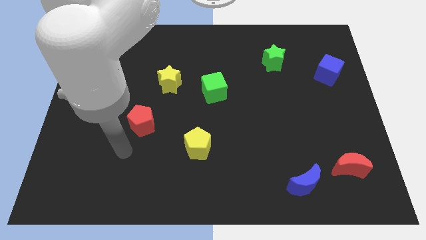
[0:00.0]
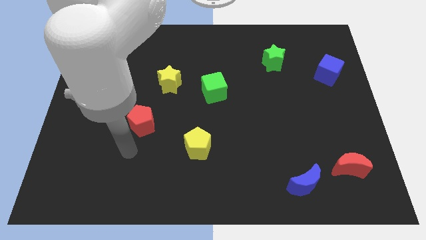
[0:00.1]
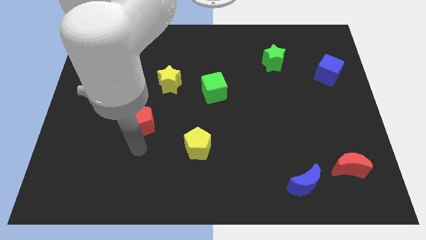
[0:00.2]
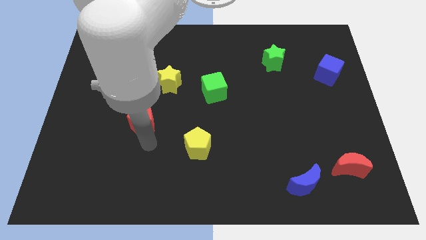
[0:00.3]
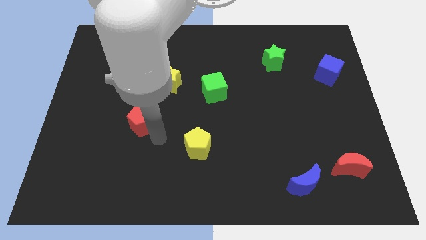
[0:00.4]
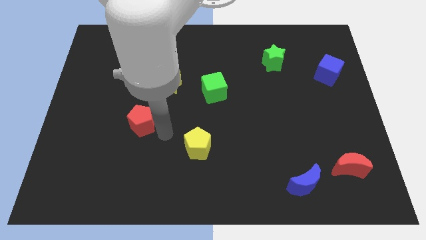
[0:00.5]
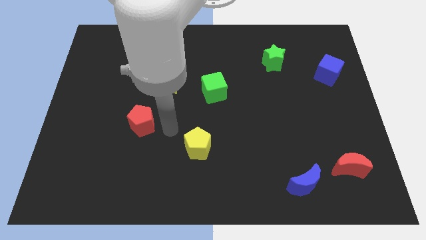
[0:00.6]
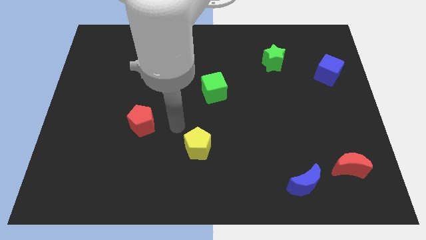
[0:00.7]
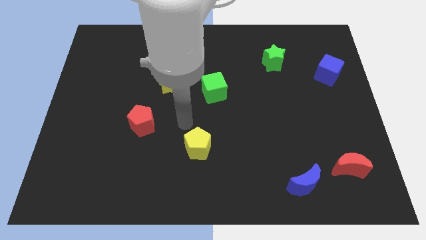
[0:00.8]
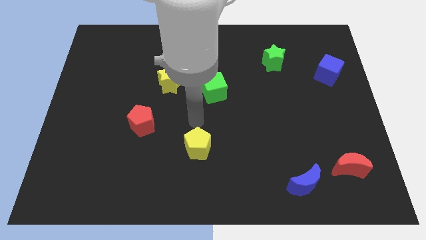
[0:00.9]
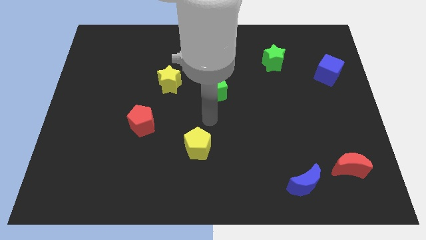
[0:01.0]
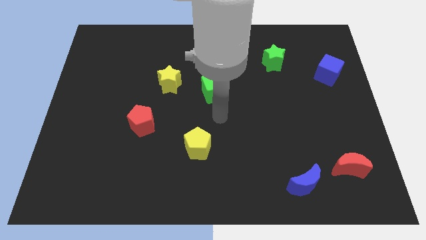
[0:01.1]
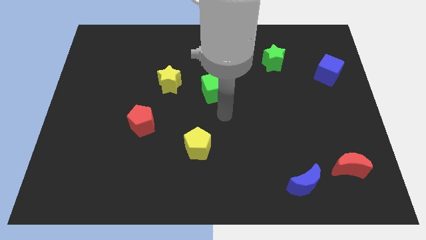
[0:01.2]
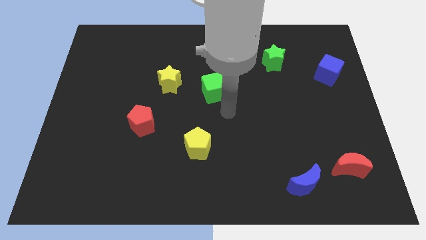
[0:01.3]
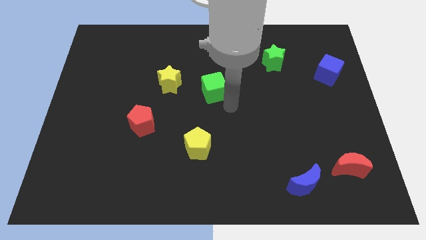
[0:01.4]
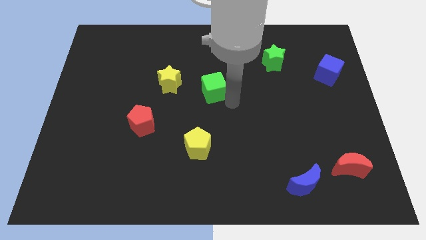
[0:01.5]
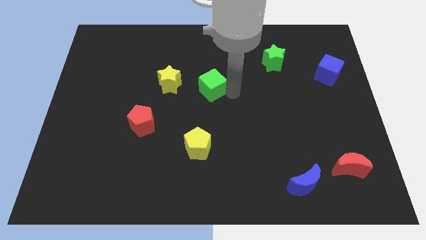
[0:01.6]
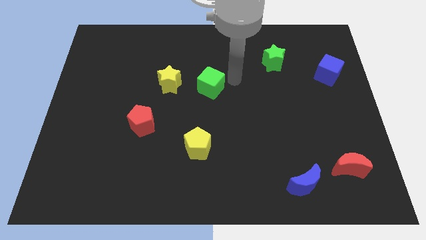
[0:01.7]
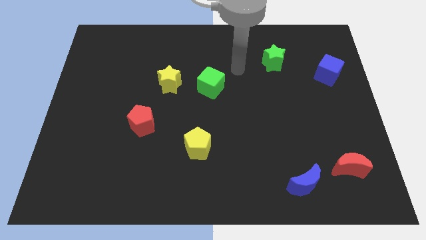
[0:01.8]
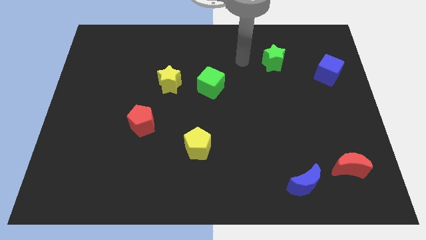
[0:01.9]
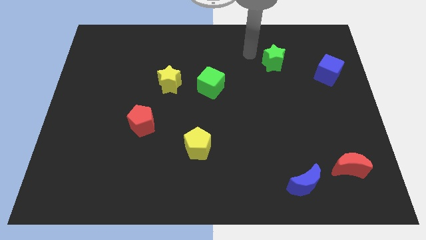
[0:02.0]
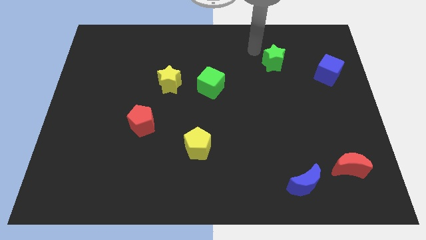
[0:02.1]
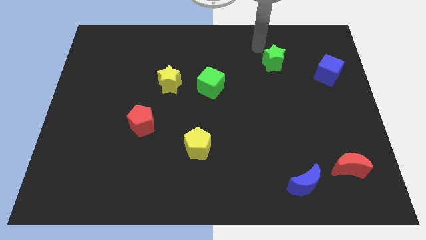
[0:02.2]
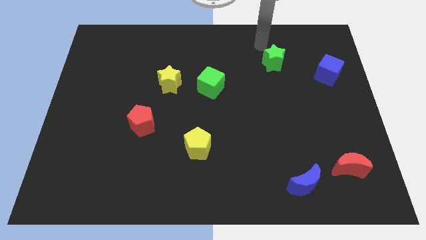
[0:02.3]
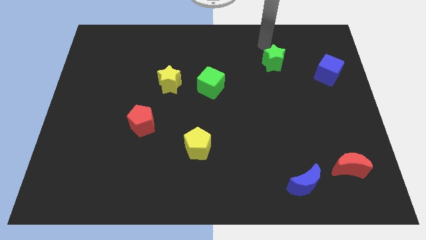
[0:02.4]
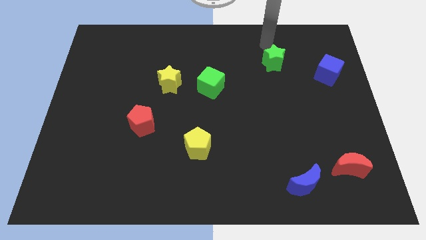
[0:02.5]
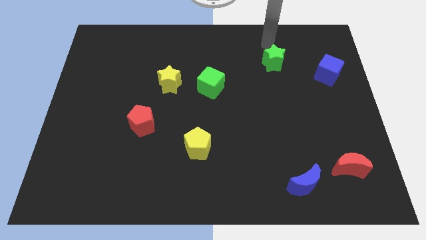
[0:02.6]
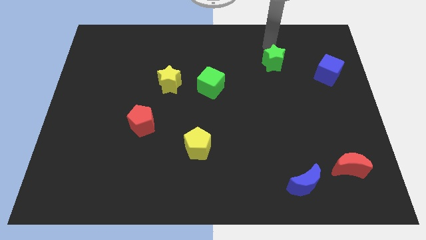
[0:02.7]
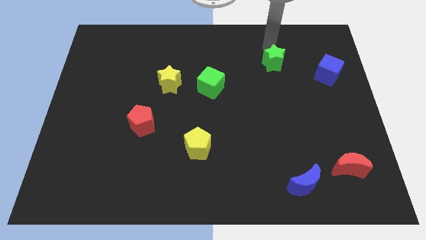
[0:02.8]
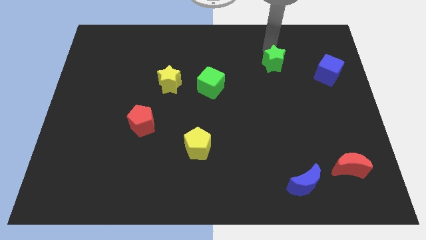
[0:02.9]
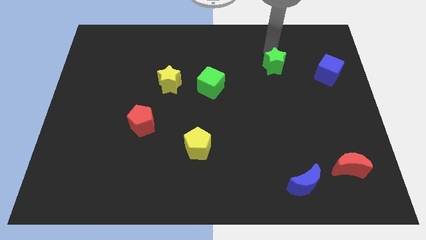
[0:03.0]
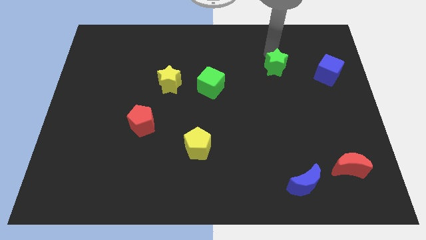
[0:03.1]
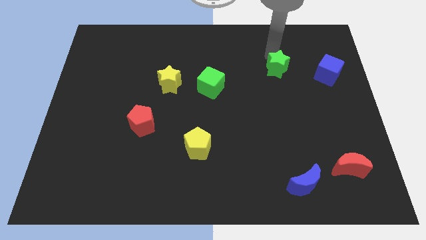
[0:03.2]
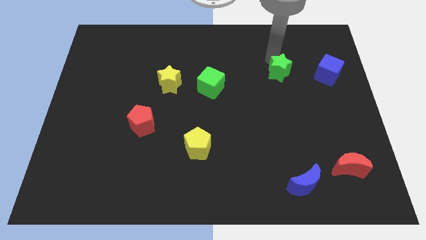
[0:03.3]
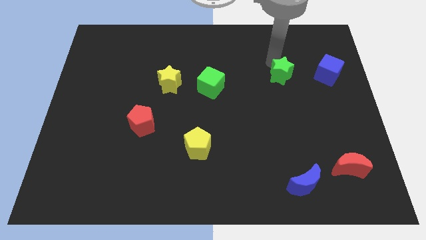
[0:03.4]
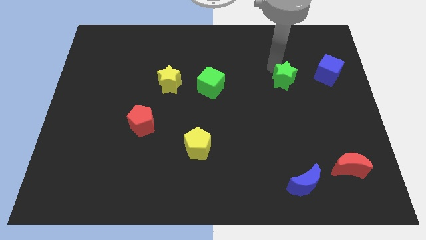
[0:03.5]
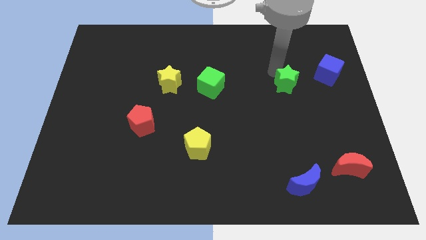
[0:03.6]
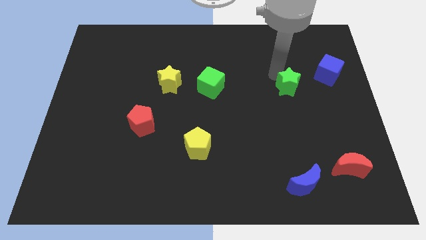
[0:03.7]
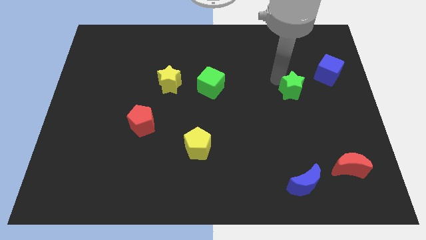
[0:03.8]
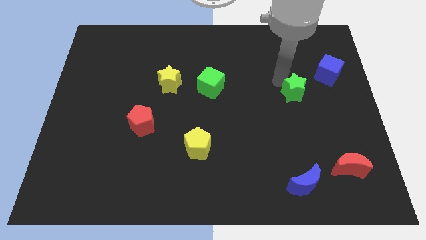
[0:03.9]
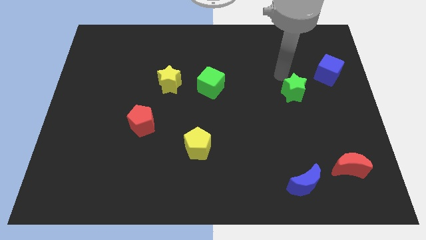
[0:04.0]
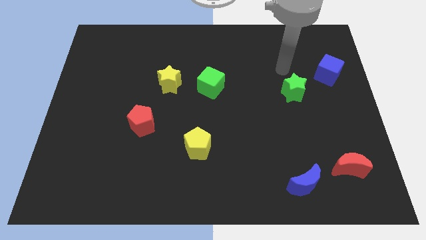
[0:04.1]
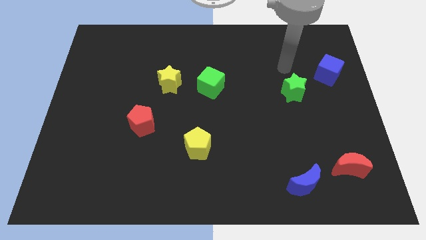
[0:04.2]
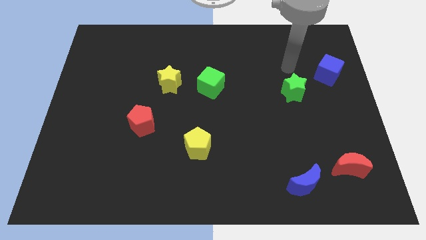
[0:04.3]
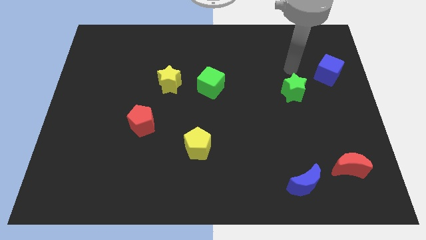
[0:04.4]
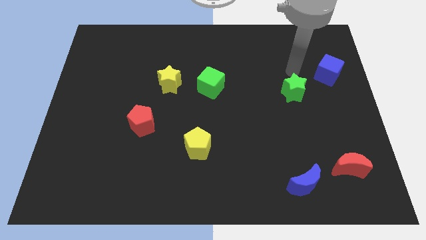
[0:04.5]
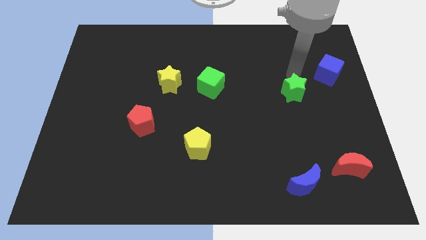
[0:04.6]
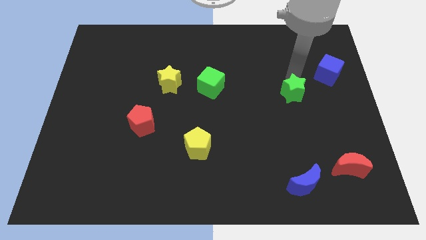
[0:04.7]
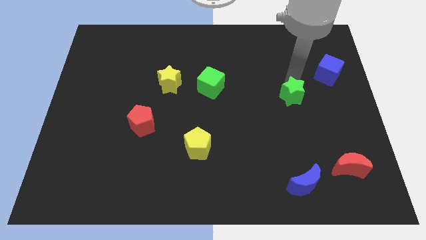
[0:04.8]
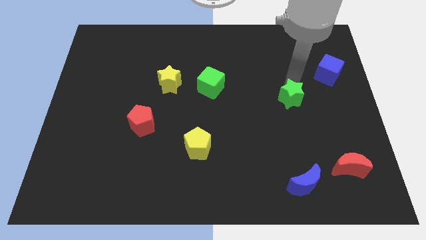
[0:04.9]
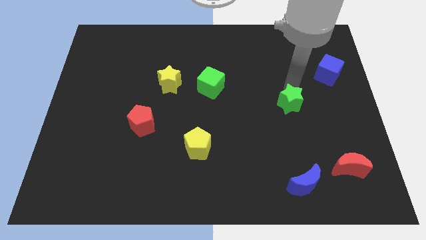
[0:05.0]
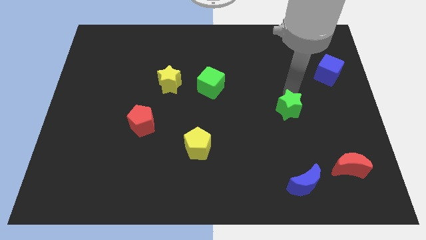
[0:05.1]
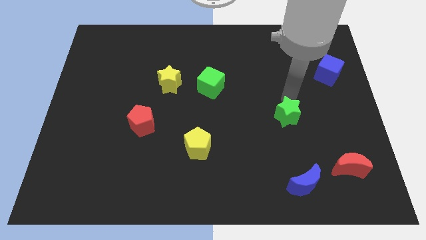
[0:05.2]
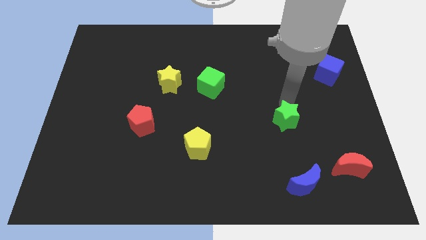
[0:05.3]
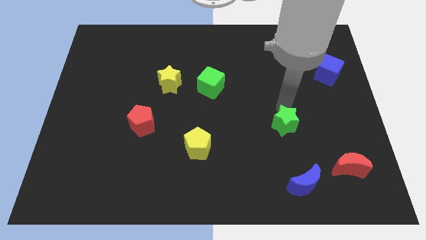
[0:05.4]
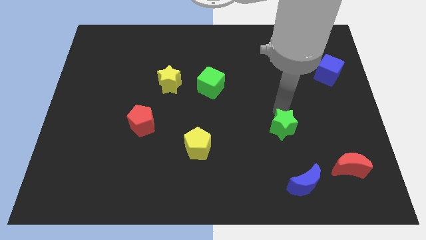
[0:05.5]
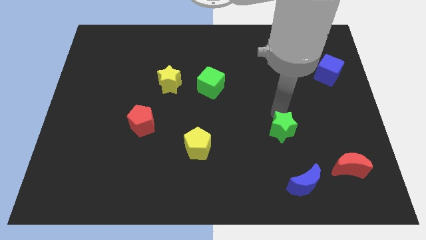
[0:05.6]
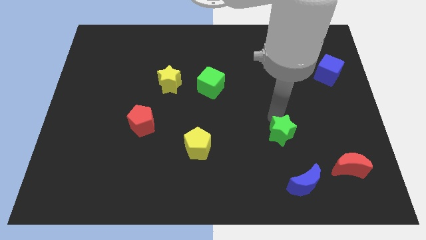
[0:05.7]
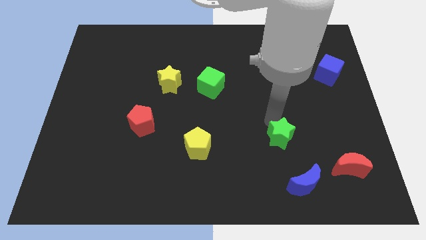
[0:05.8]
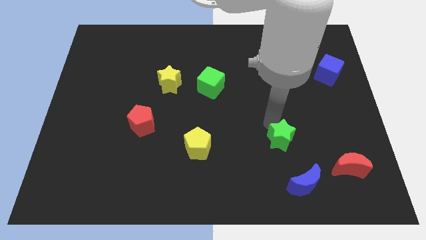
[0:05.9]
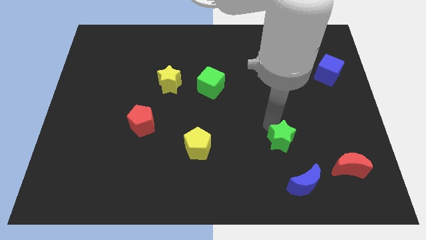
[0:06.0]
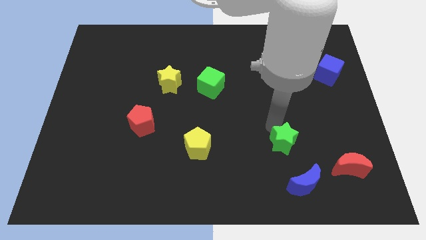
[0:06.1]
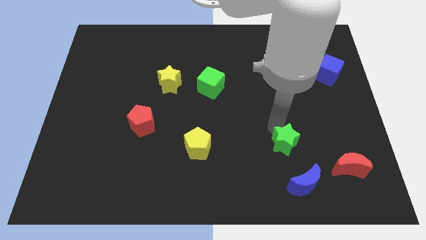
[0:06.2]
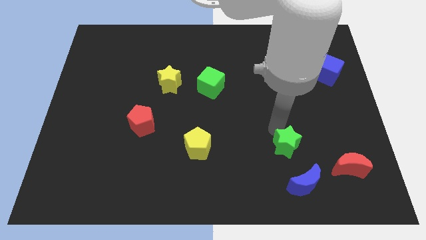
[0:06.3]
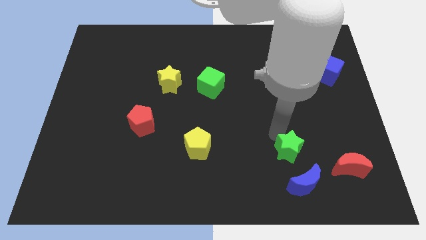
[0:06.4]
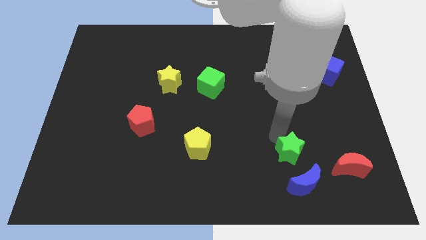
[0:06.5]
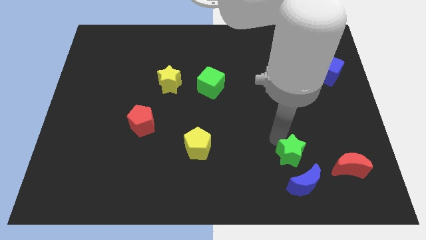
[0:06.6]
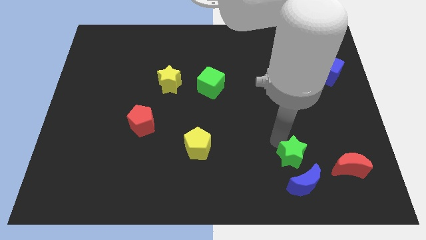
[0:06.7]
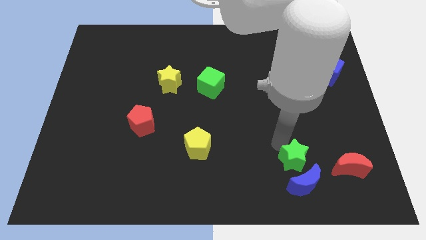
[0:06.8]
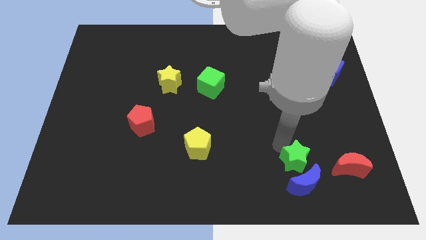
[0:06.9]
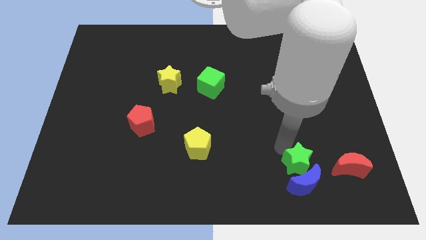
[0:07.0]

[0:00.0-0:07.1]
move the green star close to the blue moon

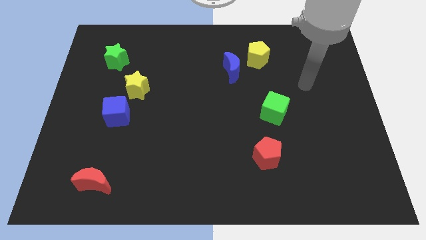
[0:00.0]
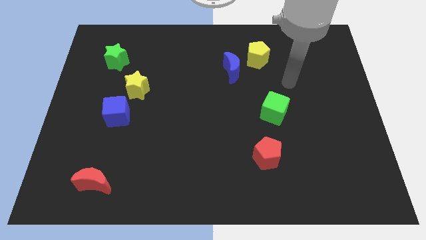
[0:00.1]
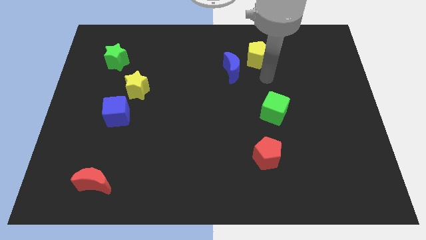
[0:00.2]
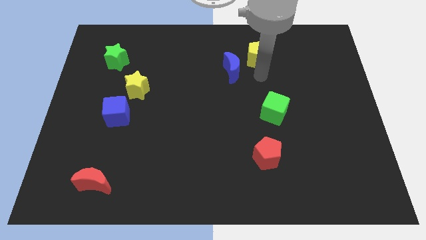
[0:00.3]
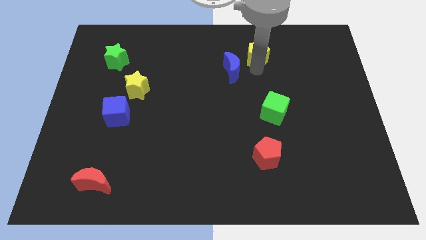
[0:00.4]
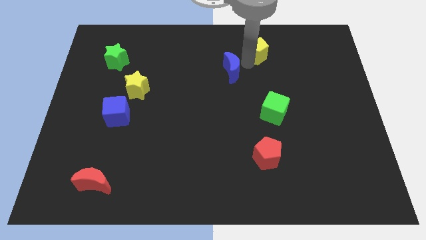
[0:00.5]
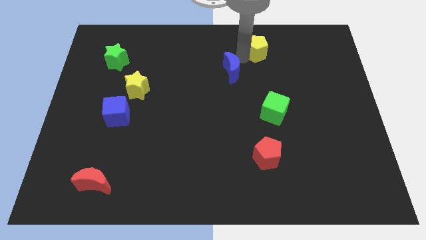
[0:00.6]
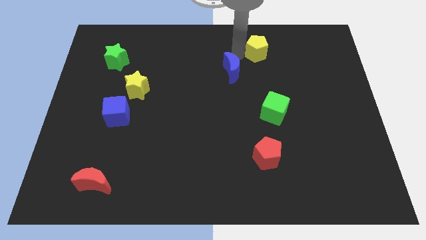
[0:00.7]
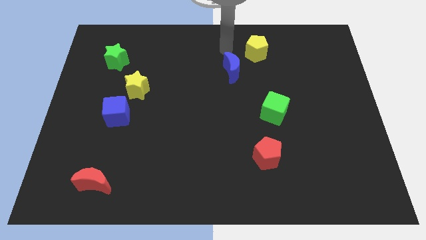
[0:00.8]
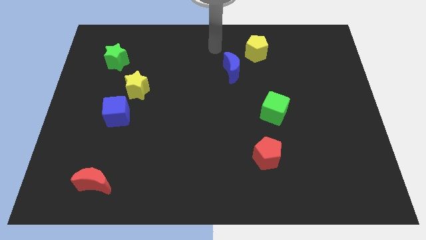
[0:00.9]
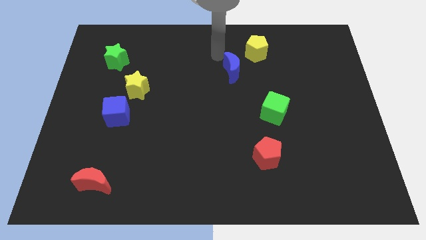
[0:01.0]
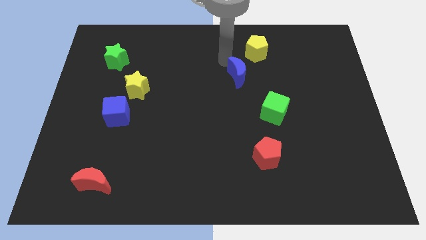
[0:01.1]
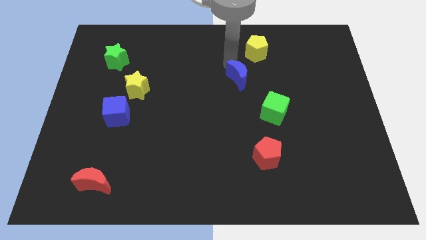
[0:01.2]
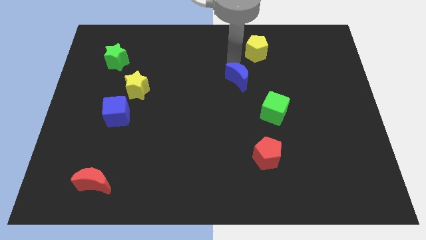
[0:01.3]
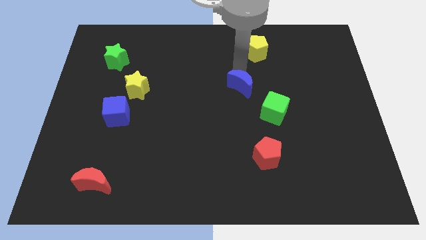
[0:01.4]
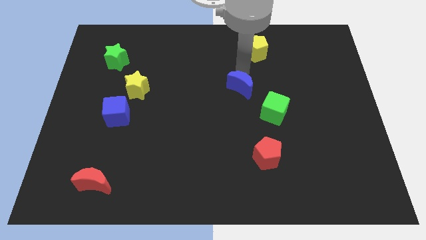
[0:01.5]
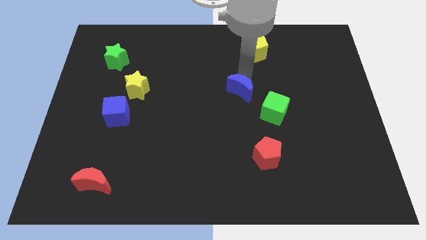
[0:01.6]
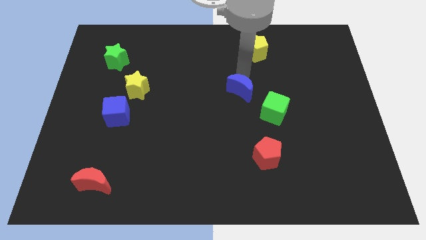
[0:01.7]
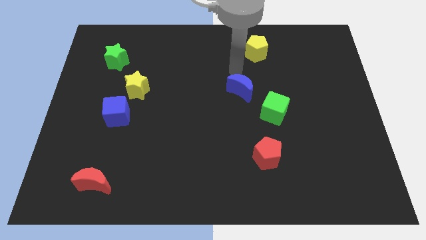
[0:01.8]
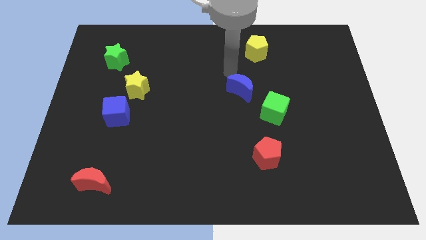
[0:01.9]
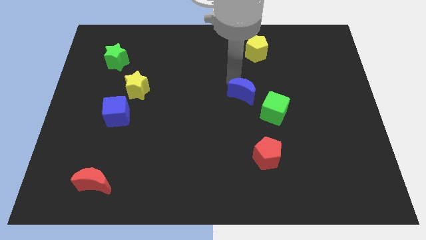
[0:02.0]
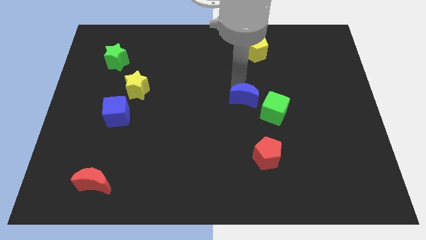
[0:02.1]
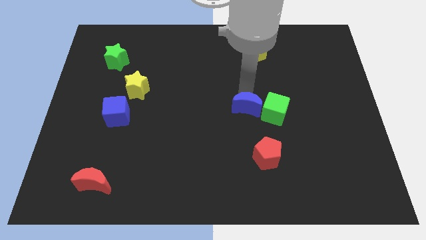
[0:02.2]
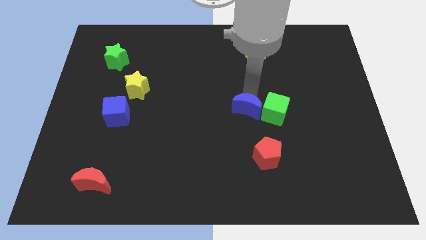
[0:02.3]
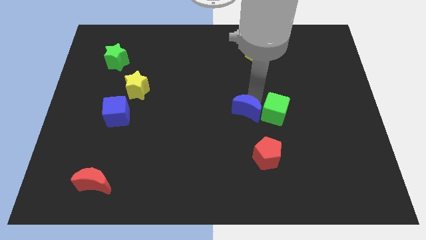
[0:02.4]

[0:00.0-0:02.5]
slide the blue moon towards the green cube
